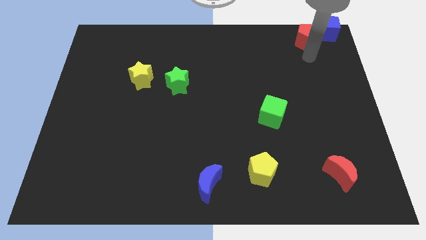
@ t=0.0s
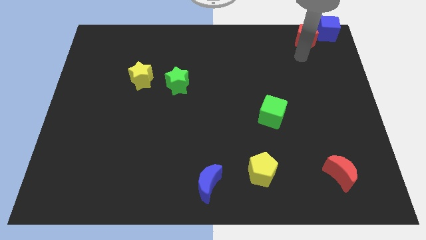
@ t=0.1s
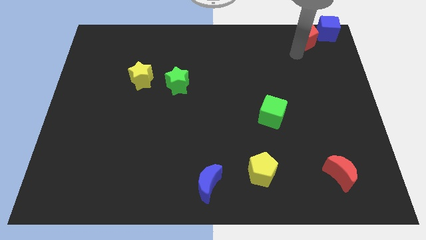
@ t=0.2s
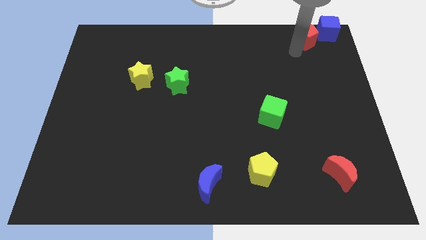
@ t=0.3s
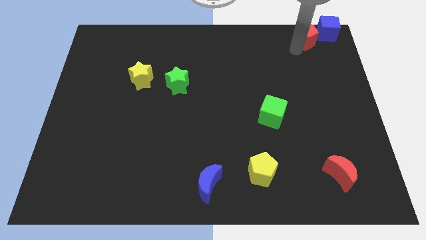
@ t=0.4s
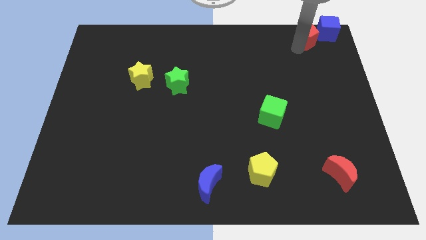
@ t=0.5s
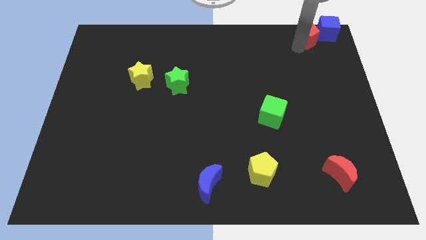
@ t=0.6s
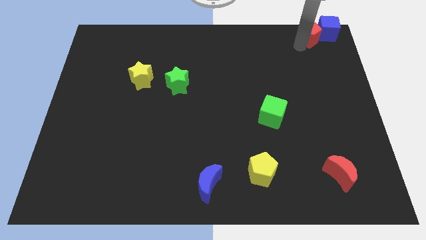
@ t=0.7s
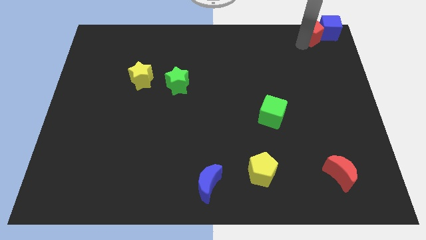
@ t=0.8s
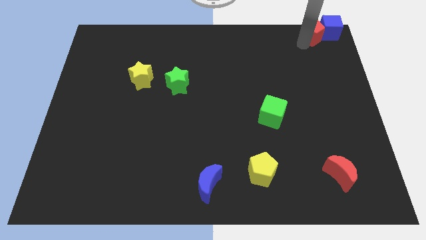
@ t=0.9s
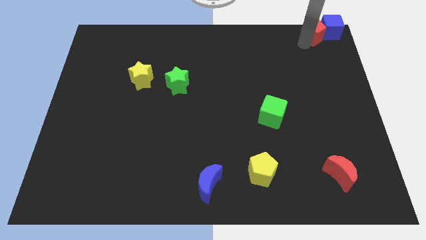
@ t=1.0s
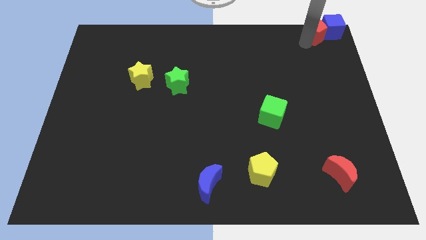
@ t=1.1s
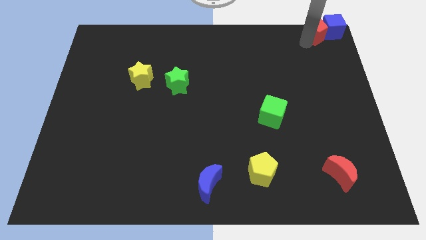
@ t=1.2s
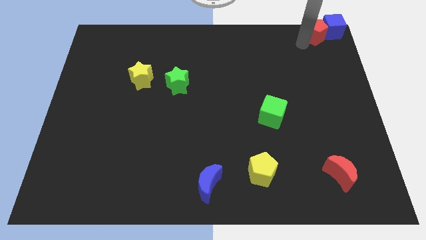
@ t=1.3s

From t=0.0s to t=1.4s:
push red pentagon into blue cube

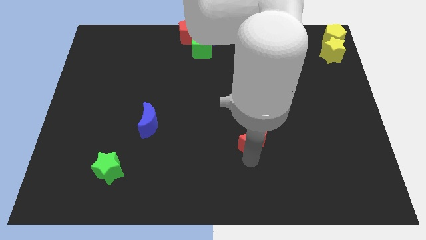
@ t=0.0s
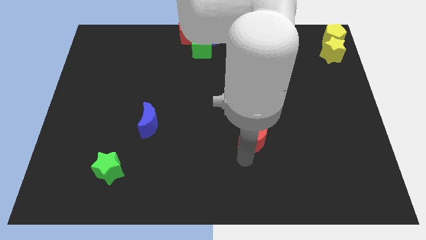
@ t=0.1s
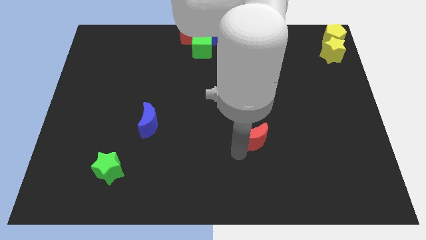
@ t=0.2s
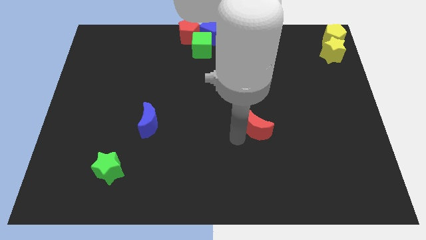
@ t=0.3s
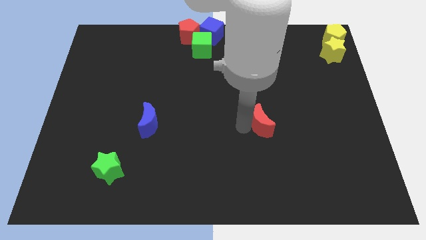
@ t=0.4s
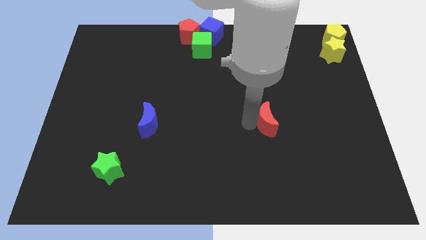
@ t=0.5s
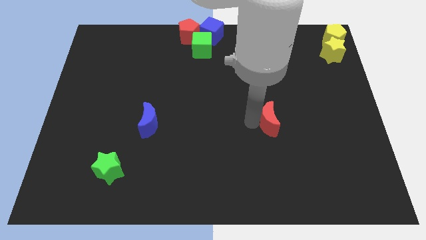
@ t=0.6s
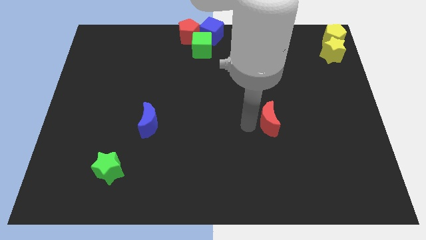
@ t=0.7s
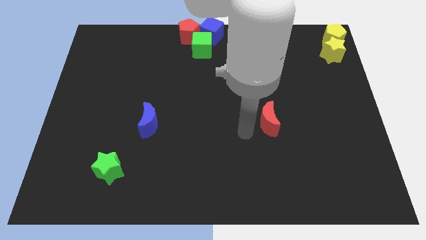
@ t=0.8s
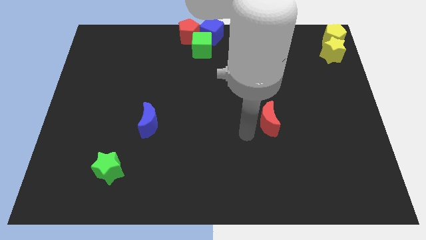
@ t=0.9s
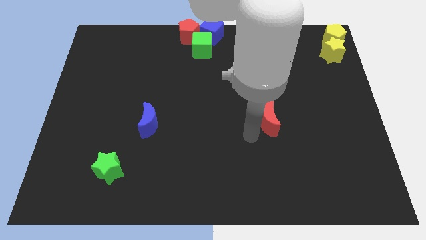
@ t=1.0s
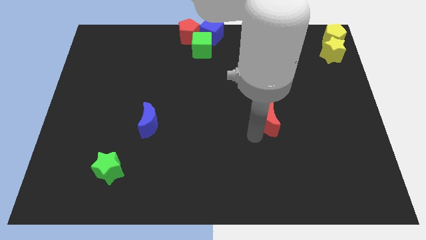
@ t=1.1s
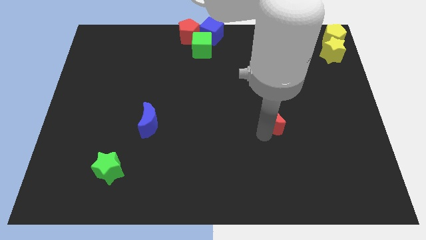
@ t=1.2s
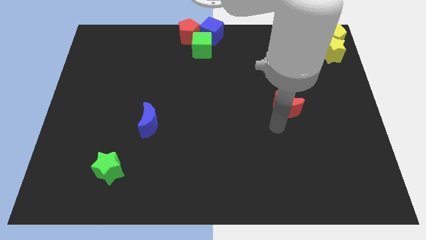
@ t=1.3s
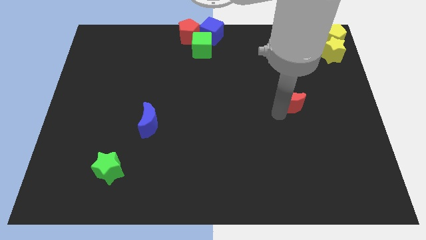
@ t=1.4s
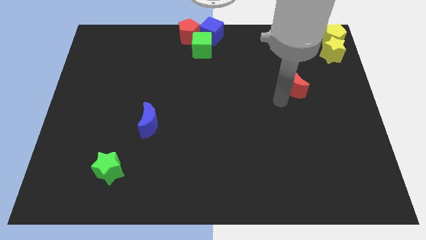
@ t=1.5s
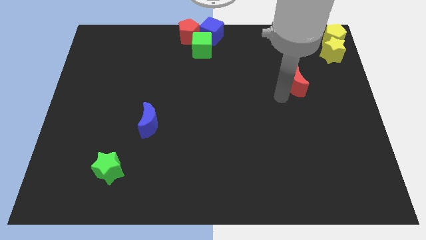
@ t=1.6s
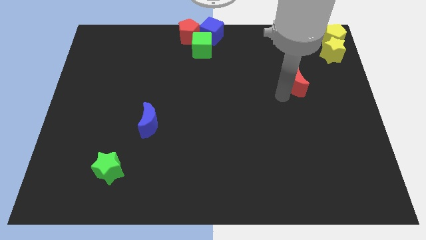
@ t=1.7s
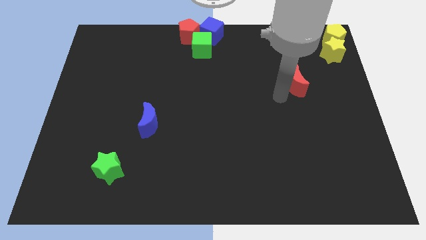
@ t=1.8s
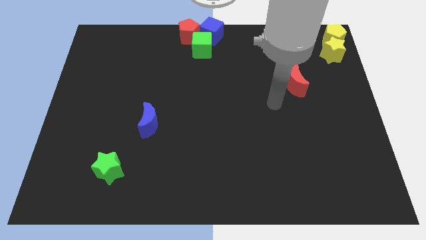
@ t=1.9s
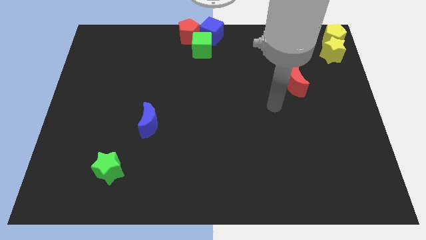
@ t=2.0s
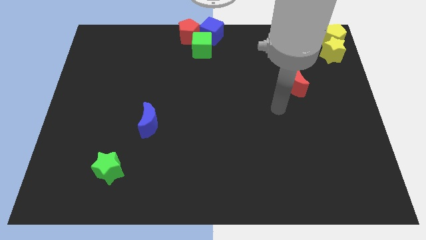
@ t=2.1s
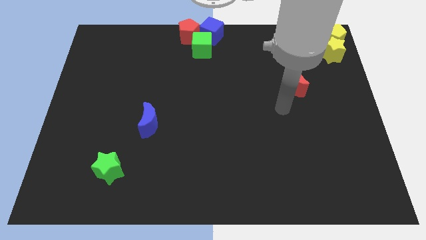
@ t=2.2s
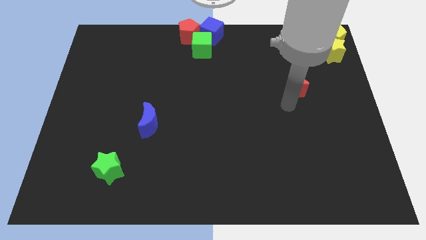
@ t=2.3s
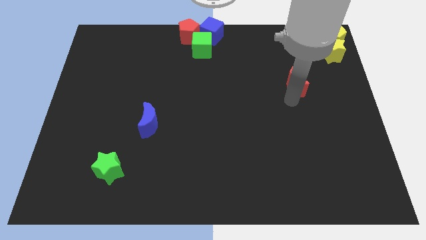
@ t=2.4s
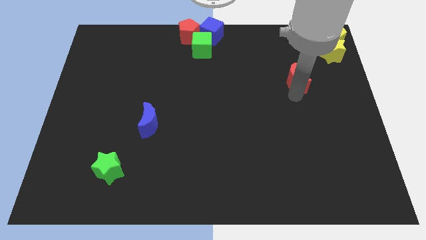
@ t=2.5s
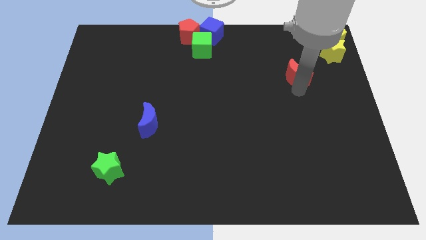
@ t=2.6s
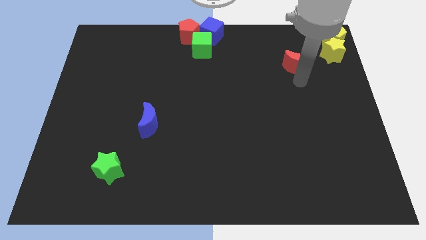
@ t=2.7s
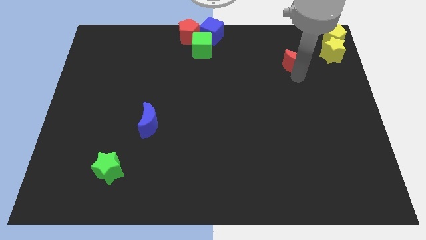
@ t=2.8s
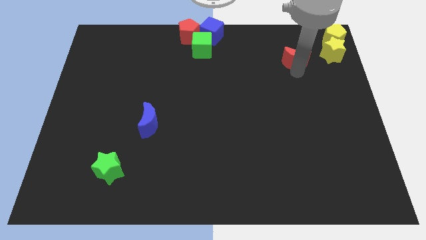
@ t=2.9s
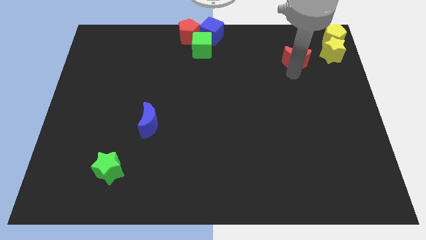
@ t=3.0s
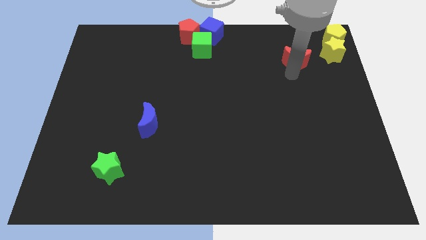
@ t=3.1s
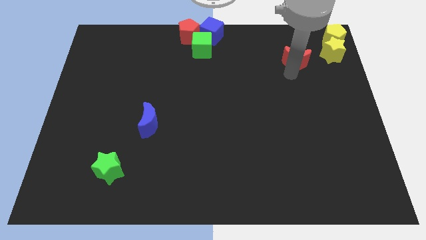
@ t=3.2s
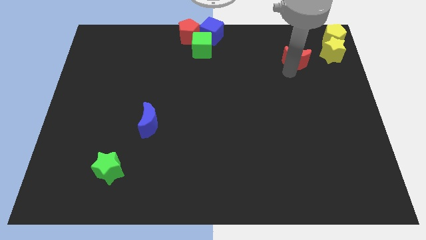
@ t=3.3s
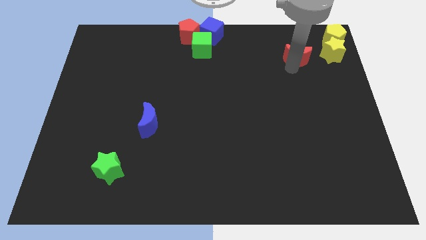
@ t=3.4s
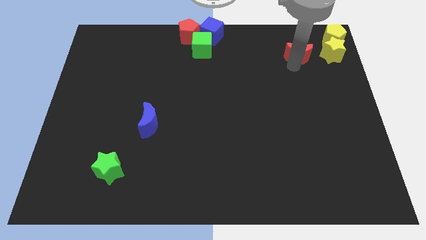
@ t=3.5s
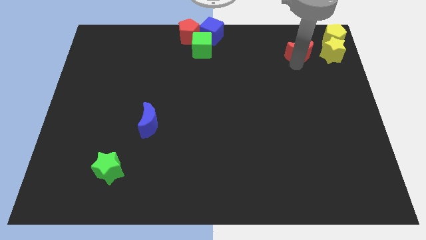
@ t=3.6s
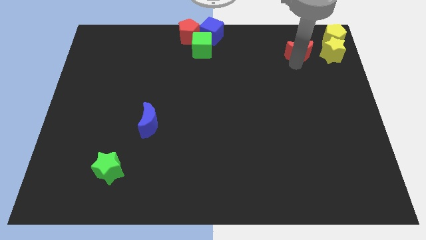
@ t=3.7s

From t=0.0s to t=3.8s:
drag the red moon left to the yellow star

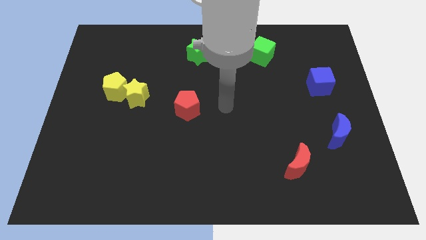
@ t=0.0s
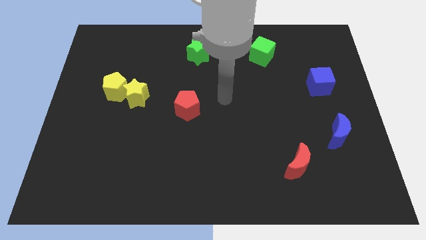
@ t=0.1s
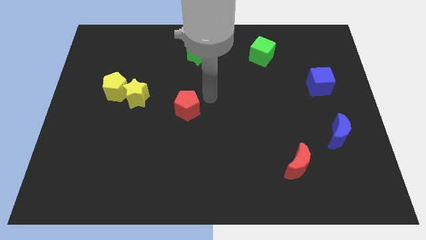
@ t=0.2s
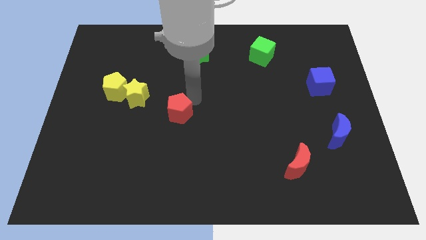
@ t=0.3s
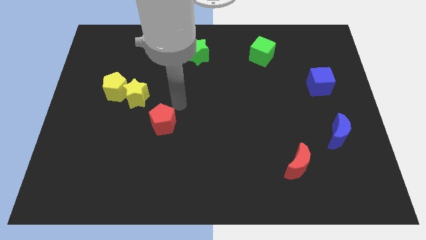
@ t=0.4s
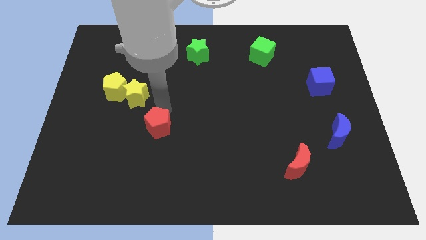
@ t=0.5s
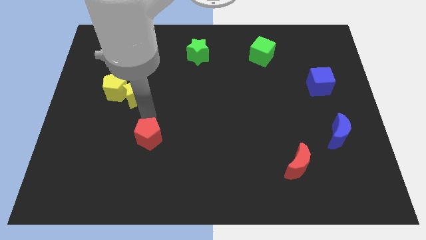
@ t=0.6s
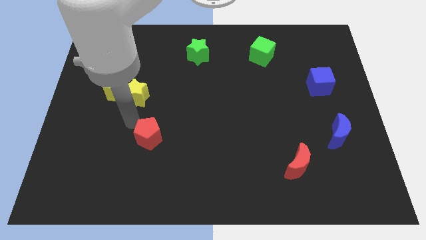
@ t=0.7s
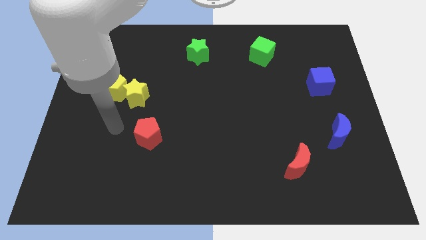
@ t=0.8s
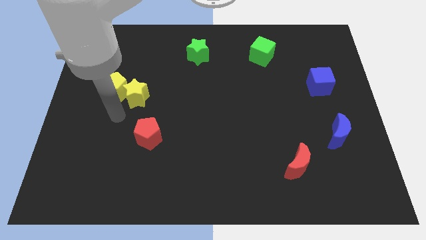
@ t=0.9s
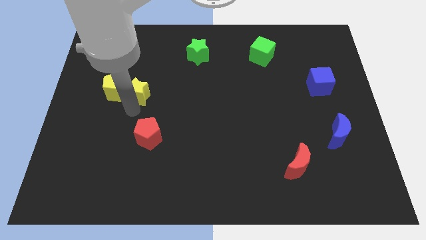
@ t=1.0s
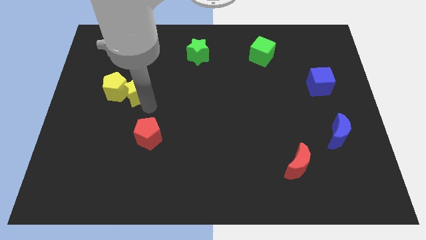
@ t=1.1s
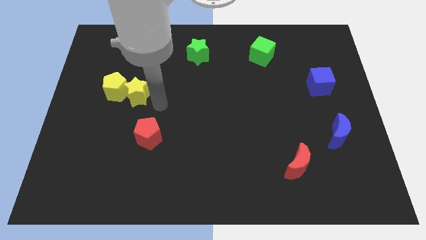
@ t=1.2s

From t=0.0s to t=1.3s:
move red pentagon diagonally below the yellow star

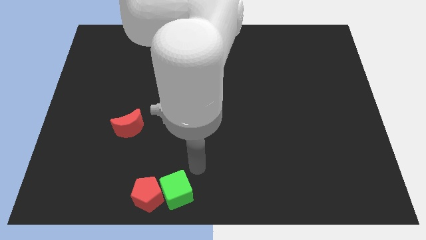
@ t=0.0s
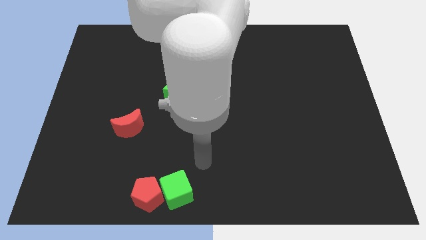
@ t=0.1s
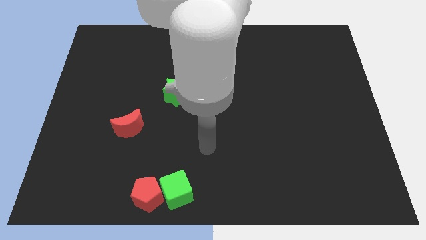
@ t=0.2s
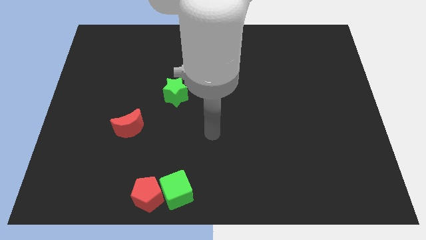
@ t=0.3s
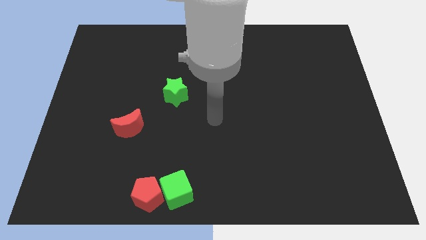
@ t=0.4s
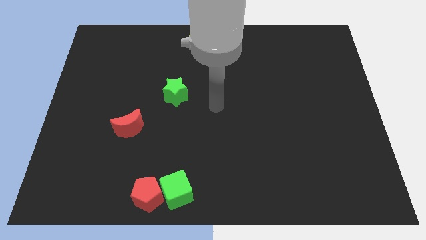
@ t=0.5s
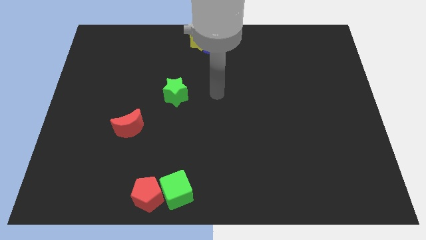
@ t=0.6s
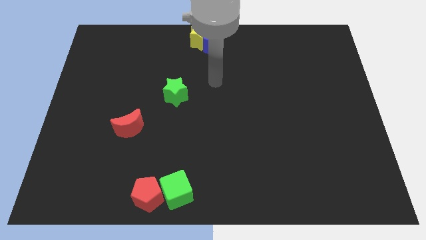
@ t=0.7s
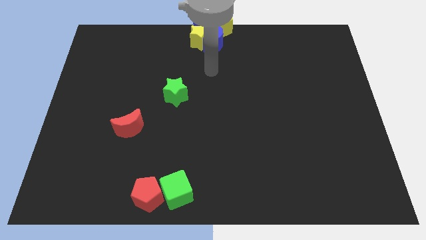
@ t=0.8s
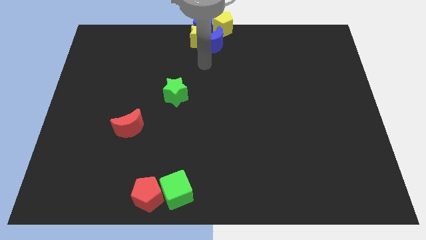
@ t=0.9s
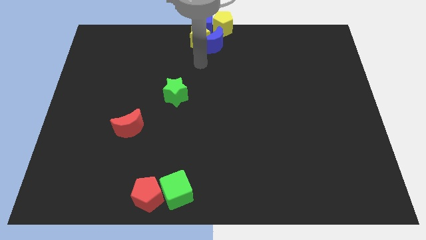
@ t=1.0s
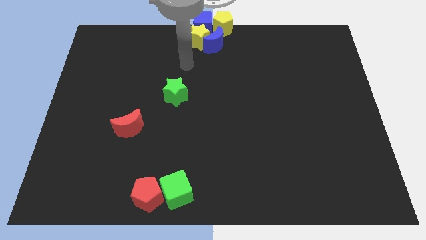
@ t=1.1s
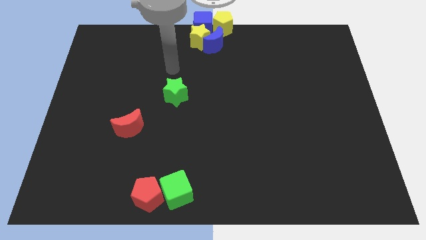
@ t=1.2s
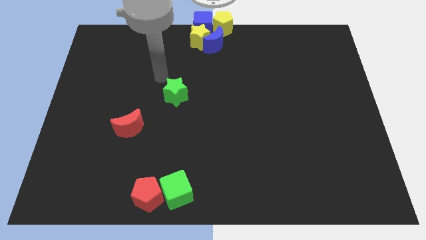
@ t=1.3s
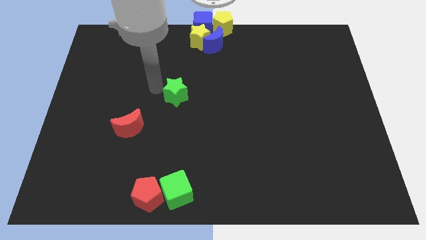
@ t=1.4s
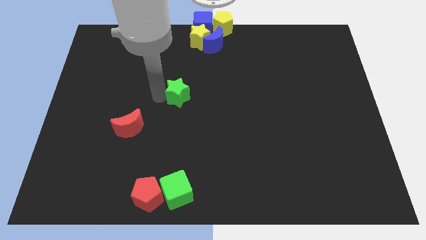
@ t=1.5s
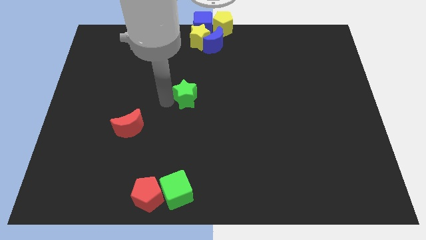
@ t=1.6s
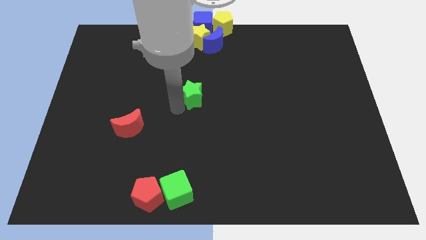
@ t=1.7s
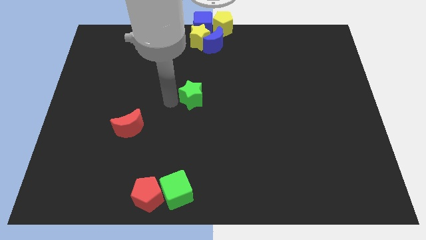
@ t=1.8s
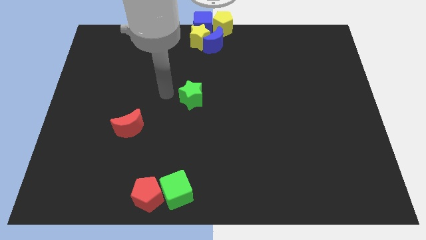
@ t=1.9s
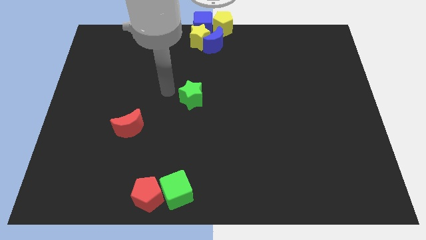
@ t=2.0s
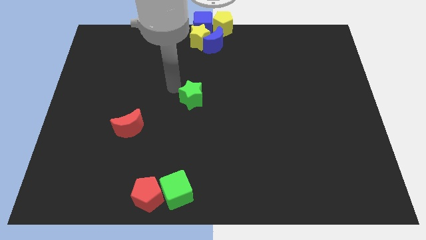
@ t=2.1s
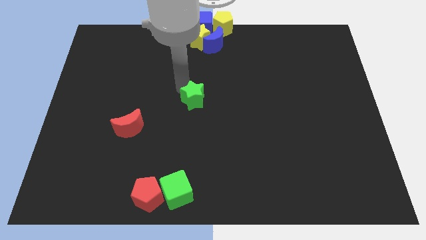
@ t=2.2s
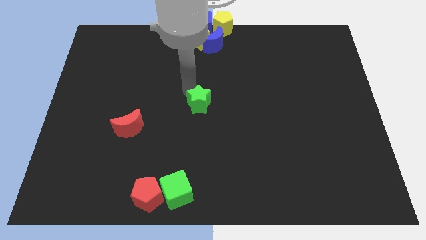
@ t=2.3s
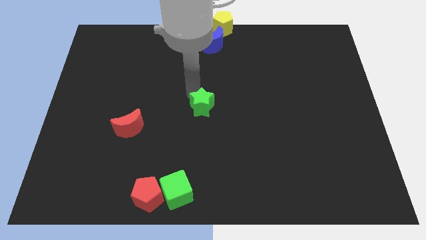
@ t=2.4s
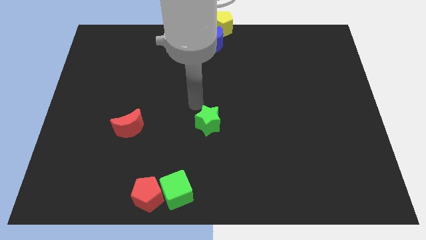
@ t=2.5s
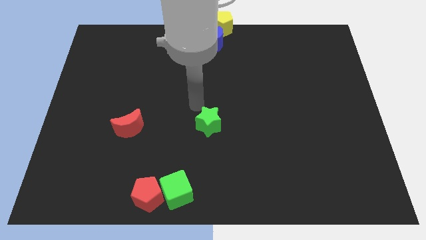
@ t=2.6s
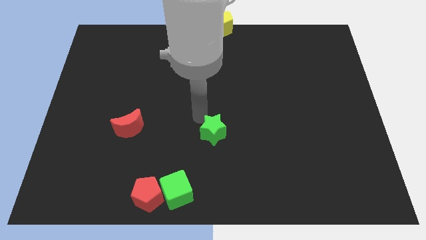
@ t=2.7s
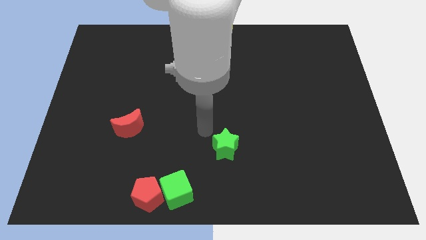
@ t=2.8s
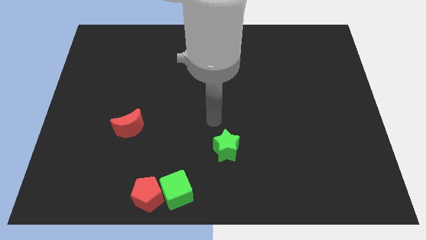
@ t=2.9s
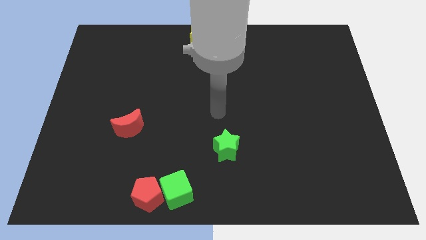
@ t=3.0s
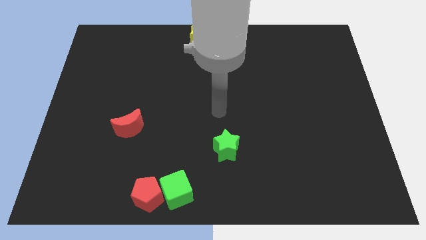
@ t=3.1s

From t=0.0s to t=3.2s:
push the green star at the bottom left of the yellow pentagon
